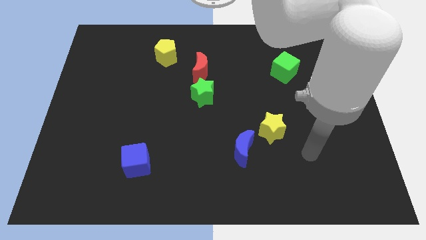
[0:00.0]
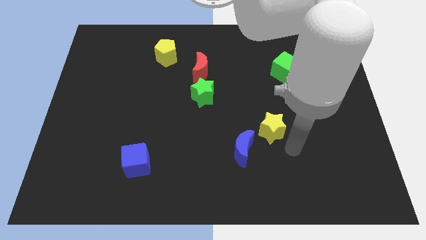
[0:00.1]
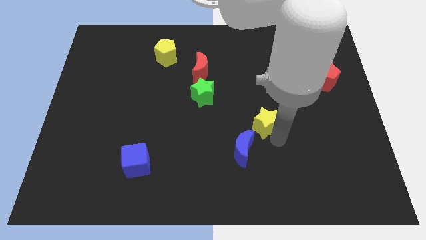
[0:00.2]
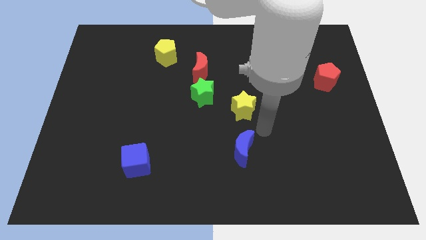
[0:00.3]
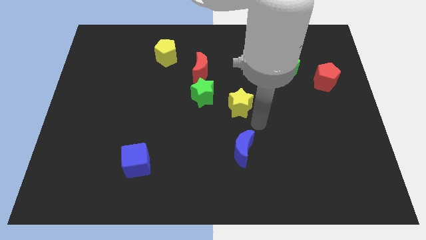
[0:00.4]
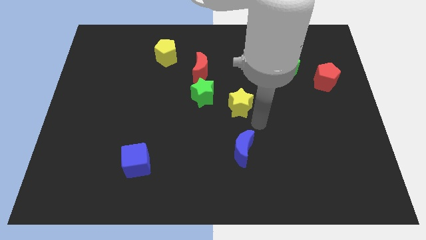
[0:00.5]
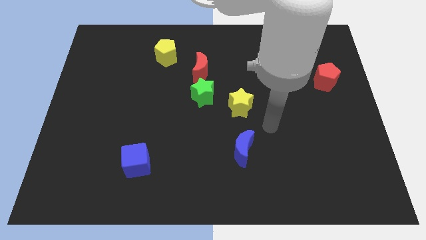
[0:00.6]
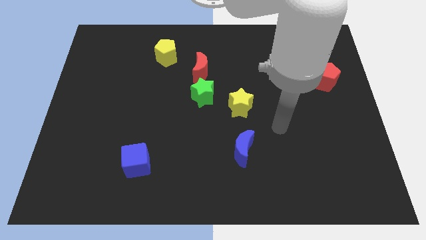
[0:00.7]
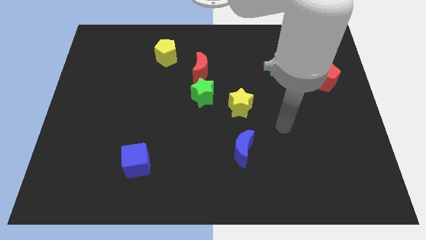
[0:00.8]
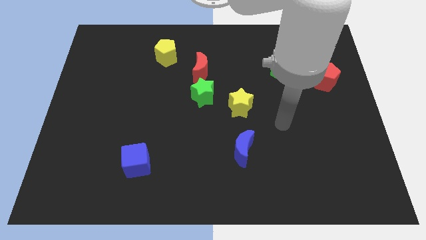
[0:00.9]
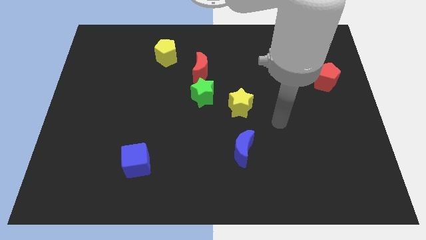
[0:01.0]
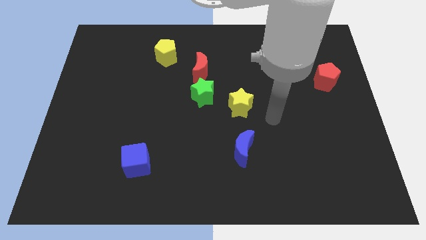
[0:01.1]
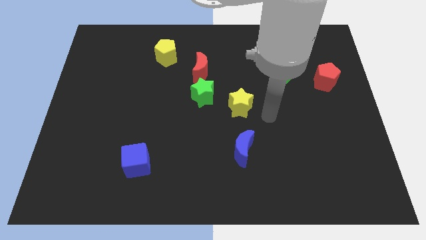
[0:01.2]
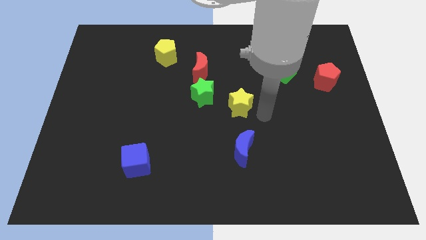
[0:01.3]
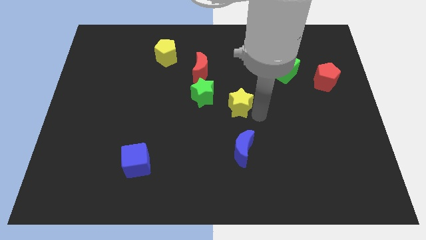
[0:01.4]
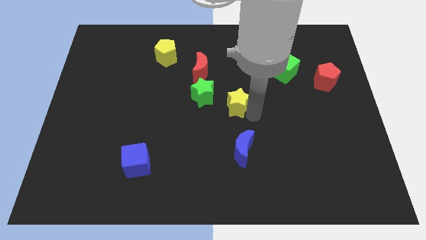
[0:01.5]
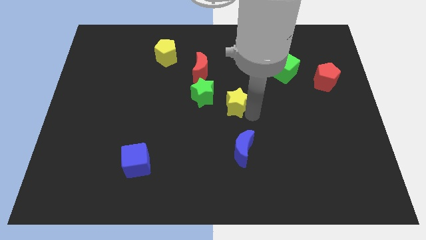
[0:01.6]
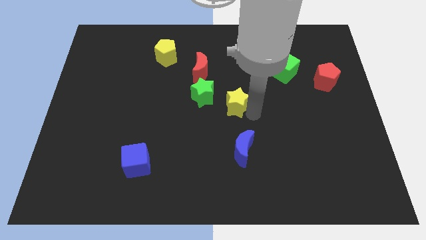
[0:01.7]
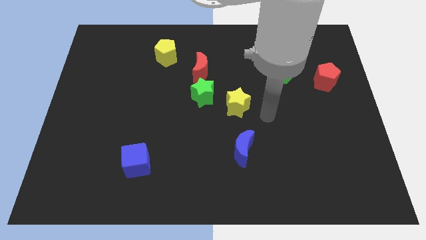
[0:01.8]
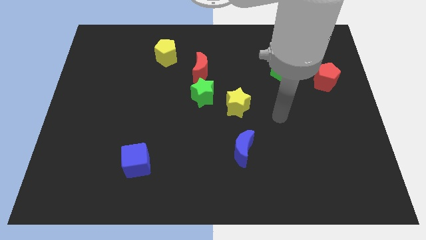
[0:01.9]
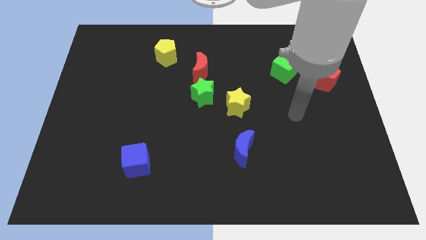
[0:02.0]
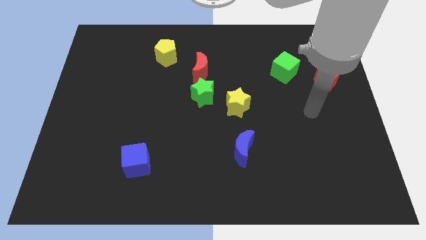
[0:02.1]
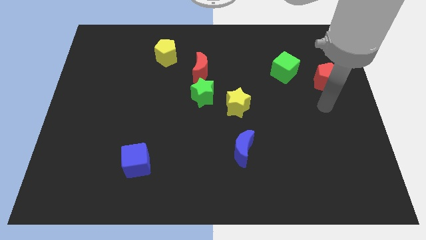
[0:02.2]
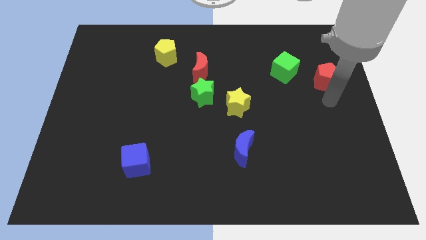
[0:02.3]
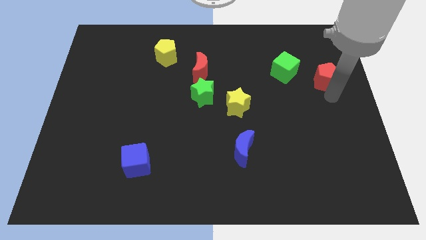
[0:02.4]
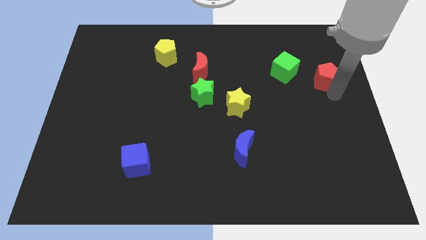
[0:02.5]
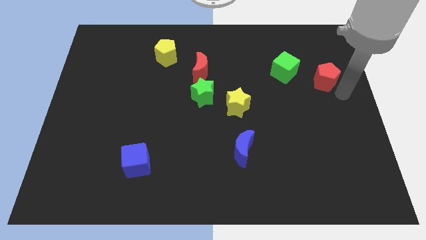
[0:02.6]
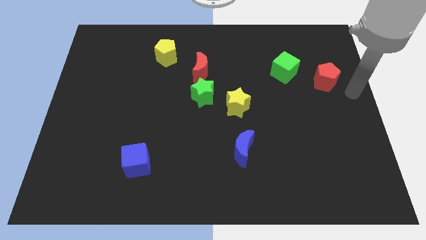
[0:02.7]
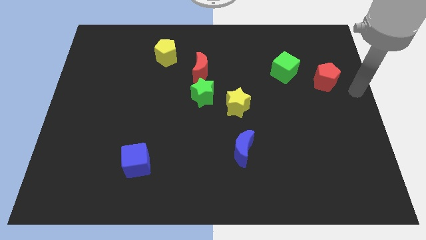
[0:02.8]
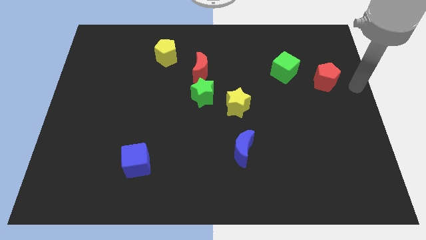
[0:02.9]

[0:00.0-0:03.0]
place the yellow star above the blue moon

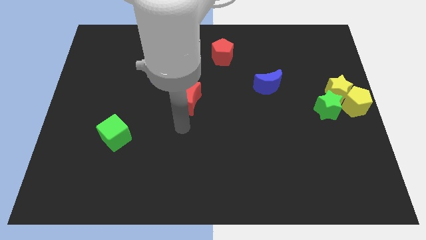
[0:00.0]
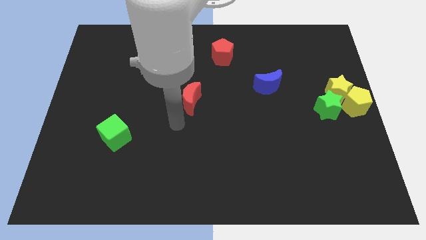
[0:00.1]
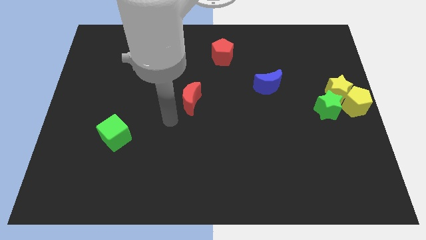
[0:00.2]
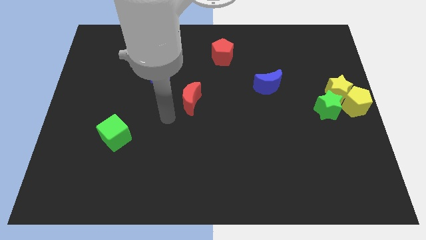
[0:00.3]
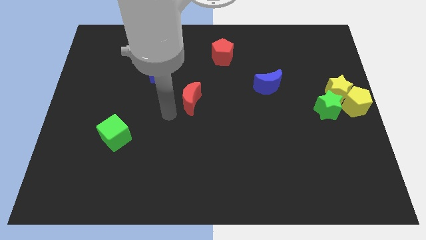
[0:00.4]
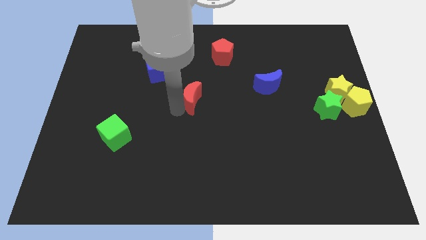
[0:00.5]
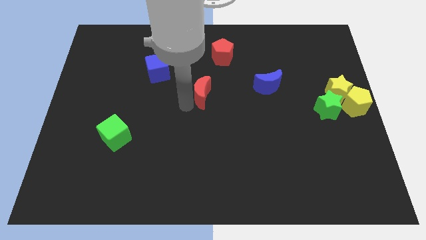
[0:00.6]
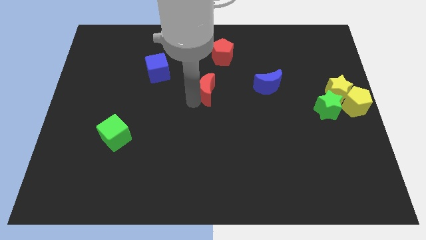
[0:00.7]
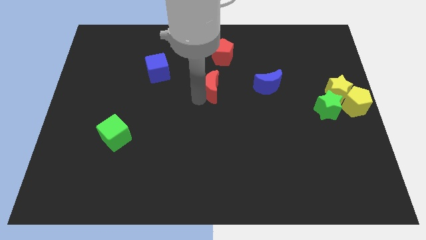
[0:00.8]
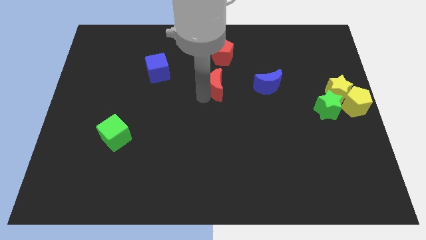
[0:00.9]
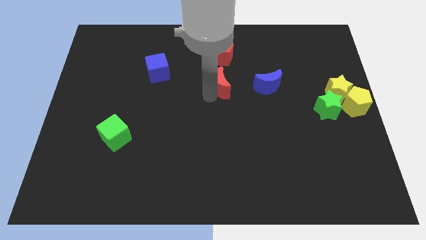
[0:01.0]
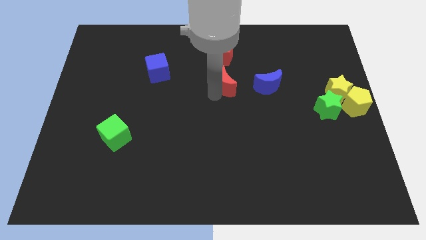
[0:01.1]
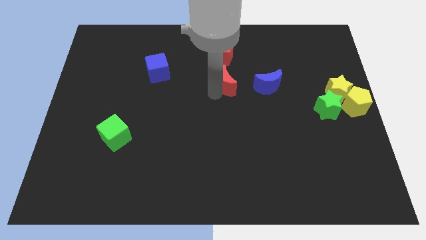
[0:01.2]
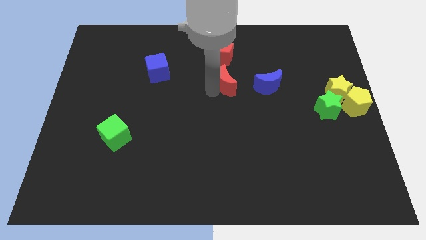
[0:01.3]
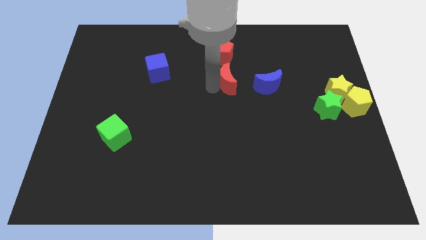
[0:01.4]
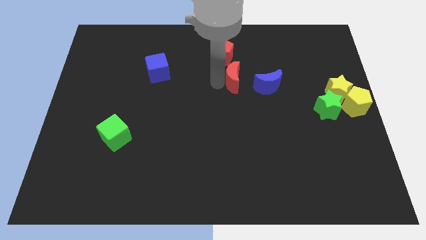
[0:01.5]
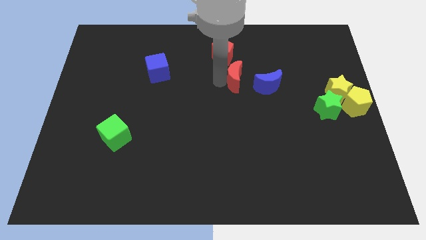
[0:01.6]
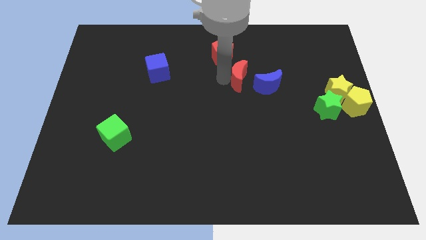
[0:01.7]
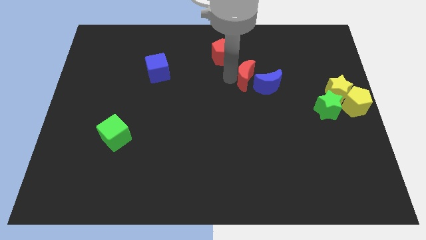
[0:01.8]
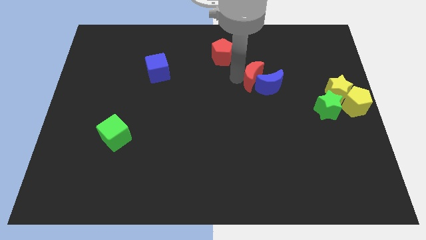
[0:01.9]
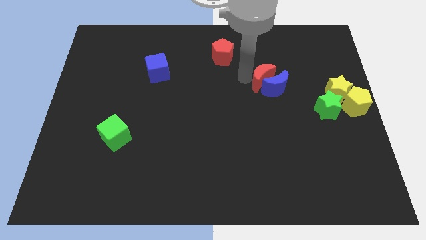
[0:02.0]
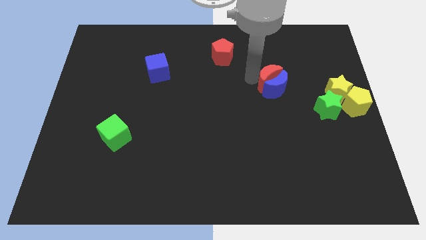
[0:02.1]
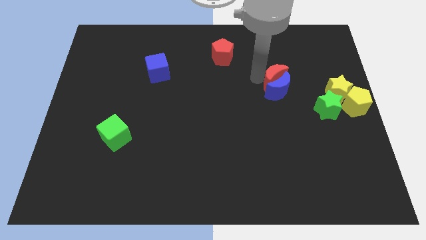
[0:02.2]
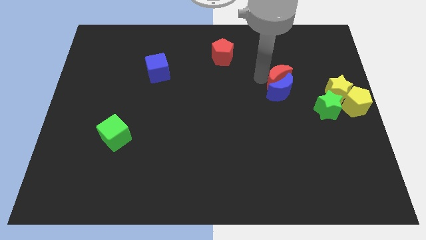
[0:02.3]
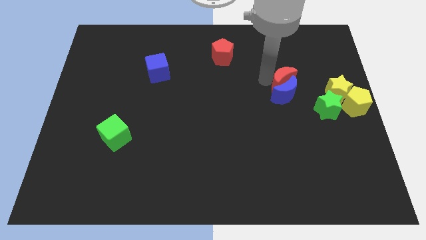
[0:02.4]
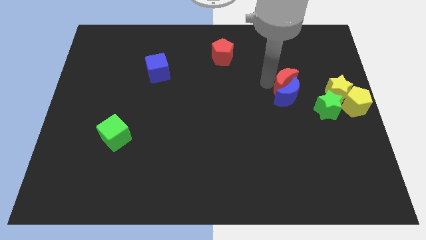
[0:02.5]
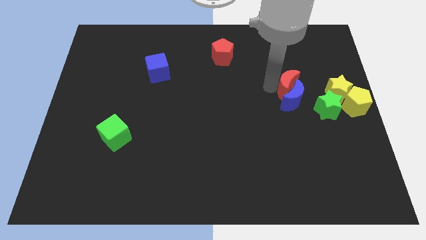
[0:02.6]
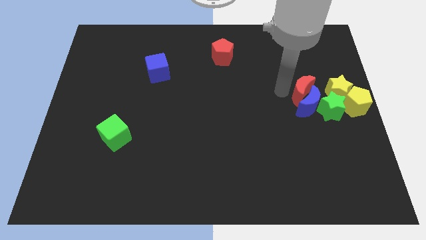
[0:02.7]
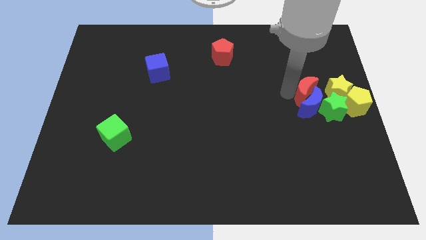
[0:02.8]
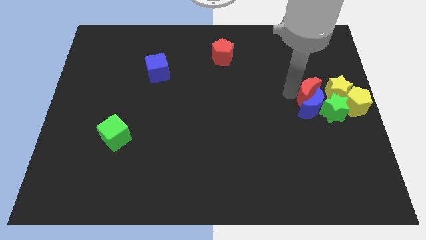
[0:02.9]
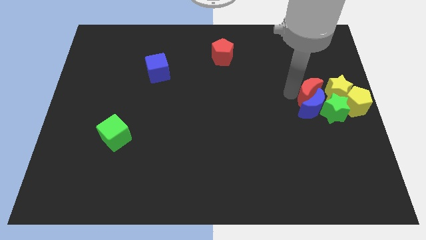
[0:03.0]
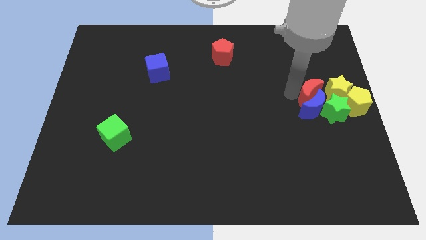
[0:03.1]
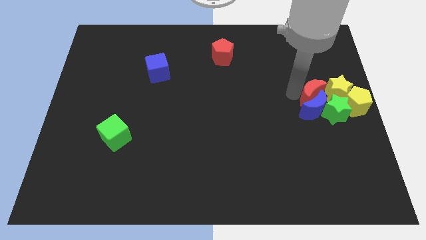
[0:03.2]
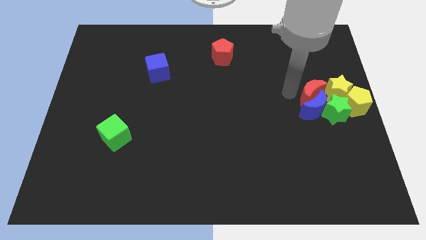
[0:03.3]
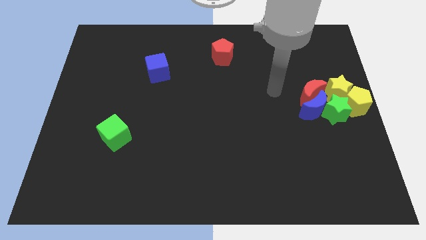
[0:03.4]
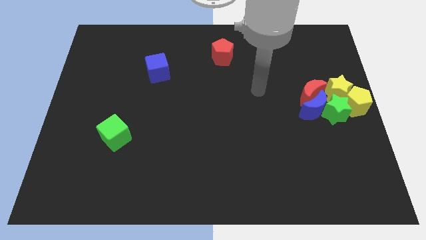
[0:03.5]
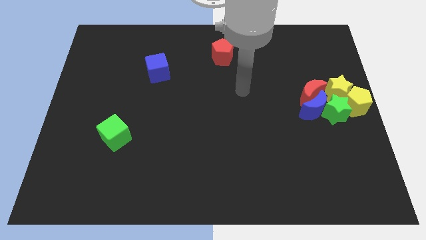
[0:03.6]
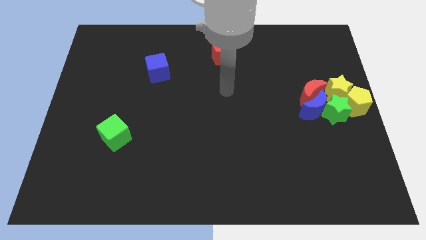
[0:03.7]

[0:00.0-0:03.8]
push the red moon and blue moon to the right center

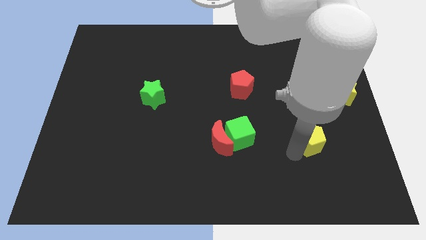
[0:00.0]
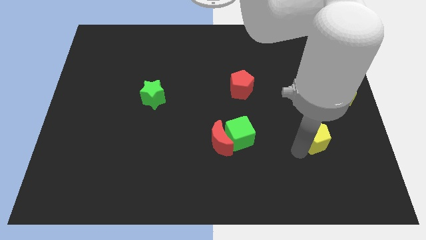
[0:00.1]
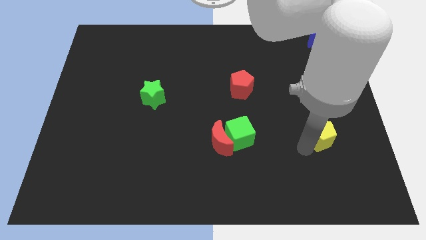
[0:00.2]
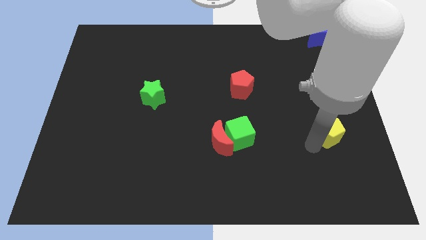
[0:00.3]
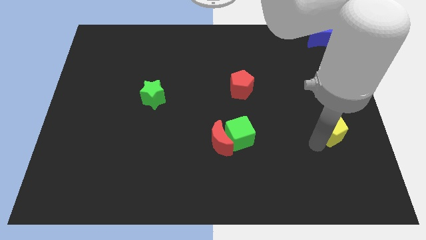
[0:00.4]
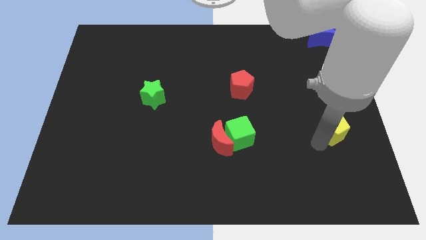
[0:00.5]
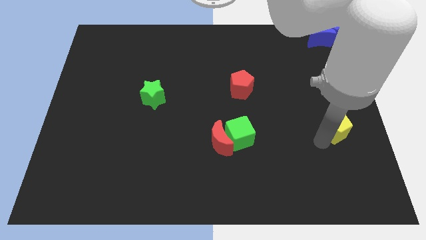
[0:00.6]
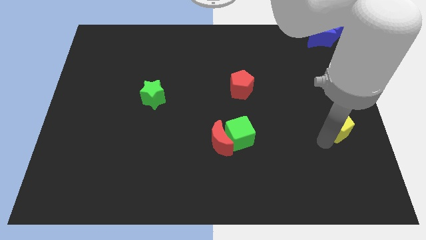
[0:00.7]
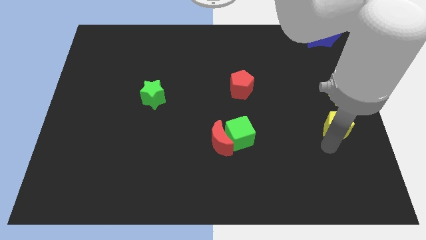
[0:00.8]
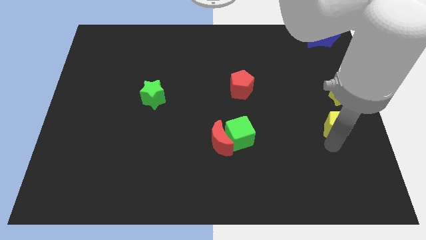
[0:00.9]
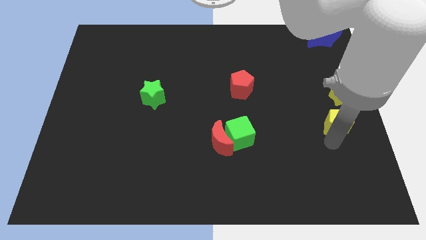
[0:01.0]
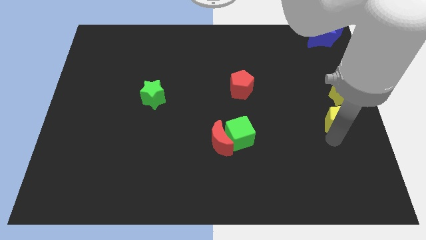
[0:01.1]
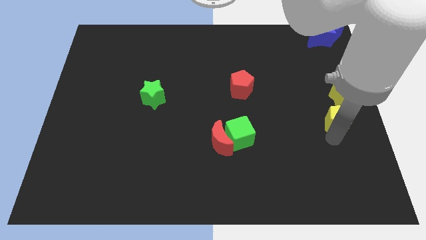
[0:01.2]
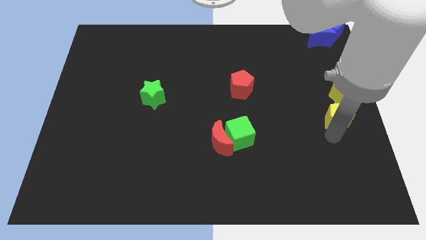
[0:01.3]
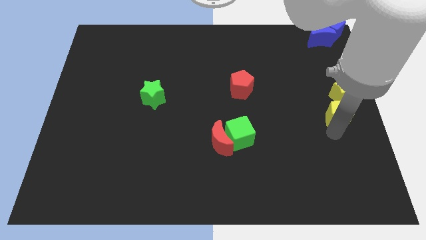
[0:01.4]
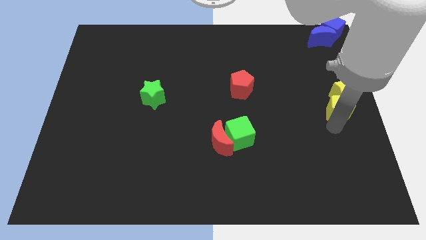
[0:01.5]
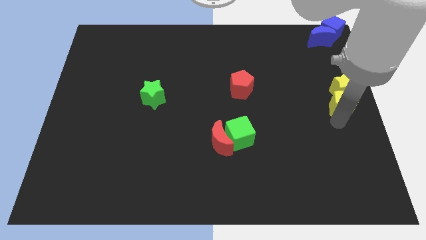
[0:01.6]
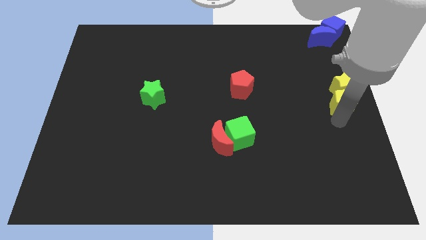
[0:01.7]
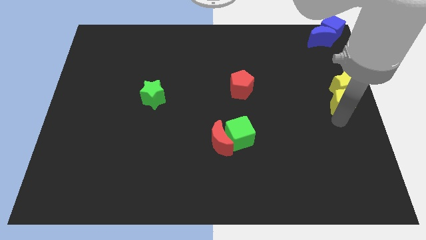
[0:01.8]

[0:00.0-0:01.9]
slide the yellow pentagon into the yellow star

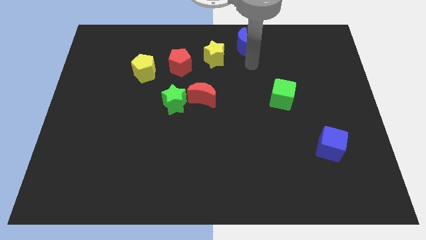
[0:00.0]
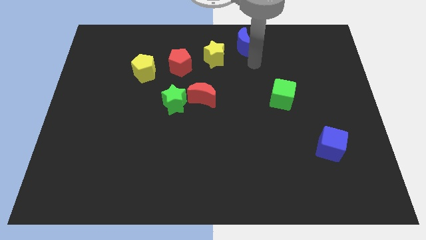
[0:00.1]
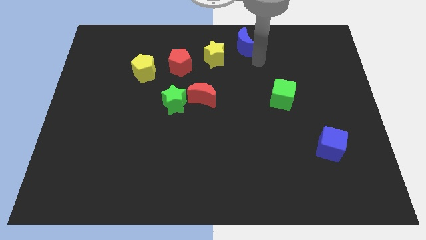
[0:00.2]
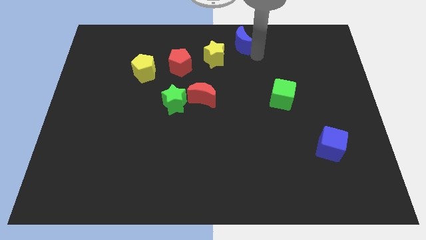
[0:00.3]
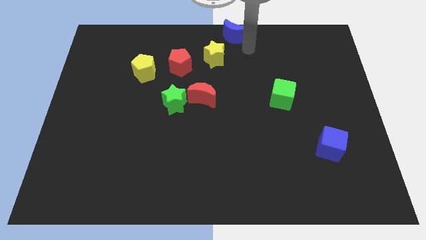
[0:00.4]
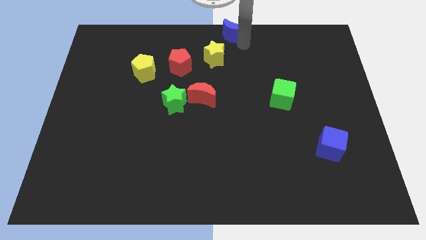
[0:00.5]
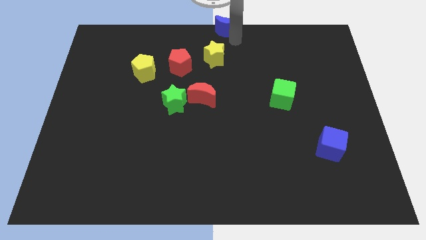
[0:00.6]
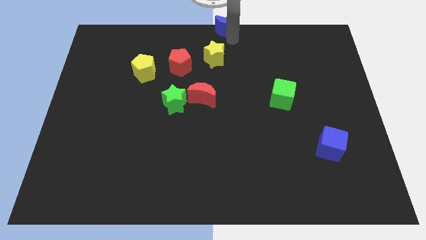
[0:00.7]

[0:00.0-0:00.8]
move the blue moon to the top center
